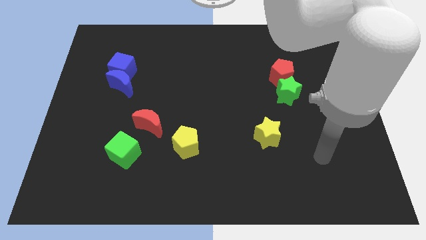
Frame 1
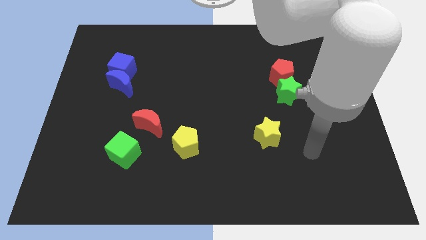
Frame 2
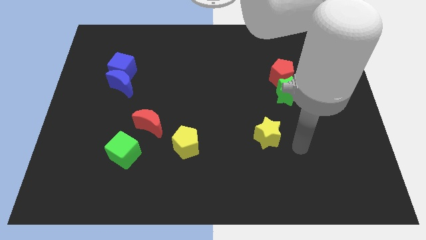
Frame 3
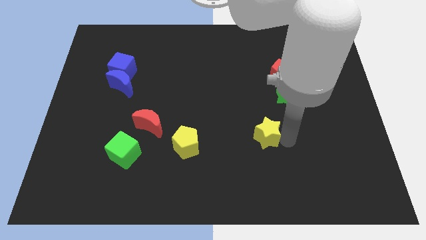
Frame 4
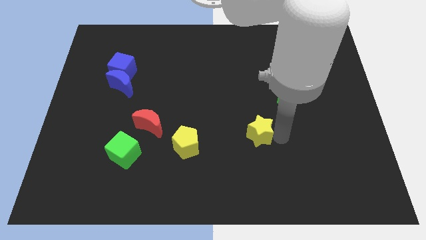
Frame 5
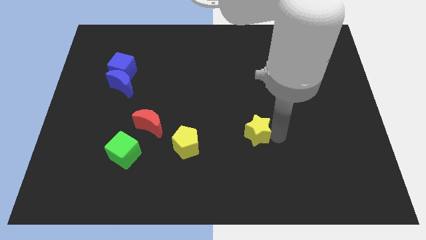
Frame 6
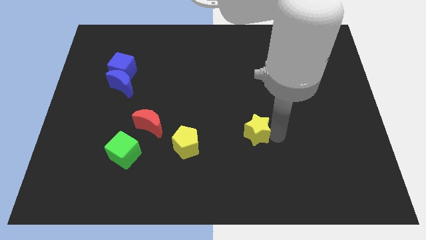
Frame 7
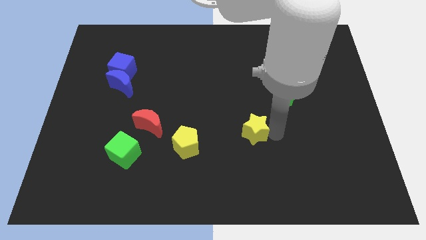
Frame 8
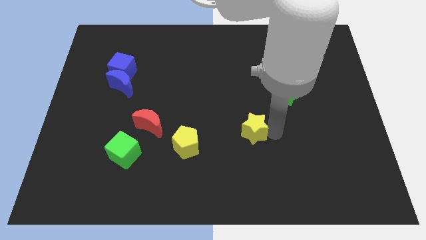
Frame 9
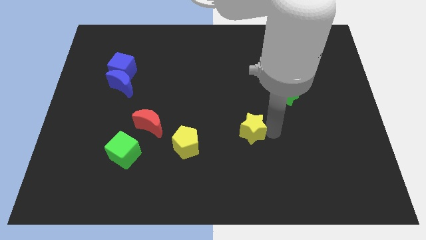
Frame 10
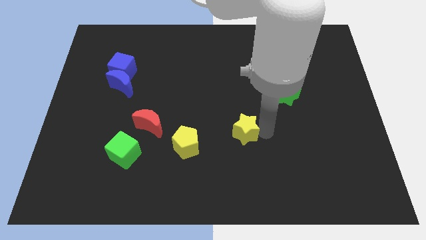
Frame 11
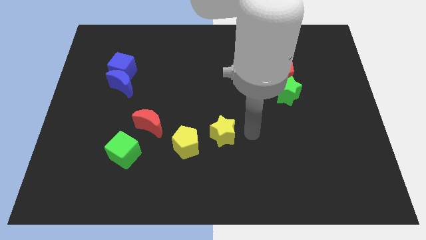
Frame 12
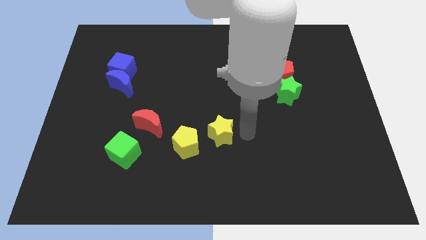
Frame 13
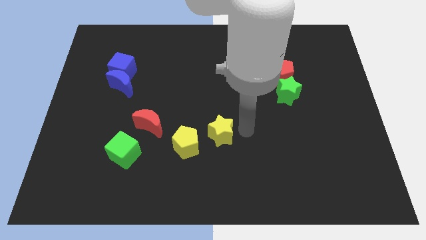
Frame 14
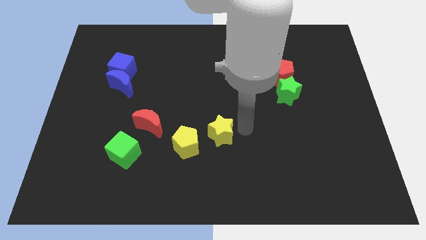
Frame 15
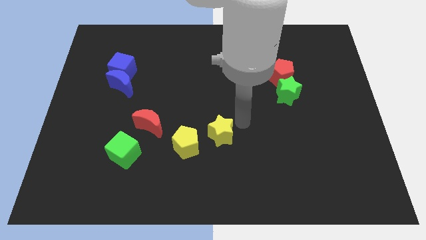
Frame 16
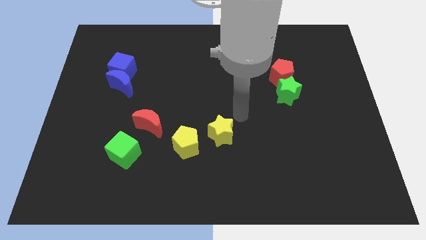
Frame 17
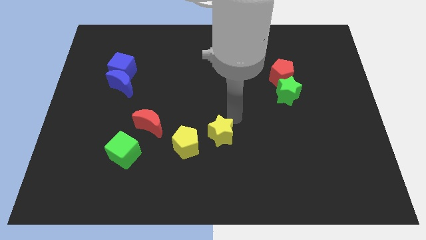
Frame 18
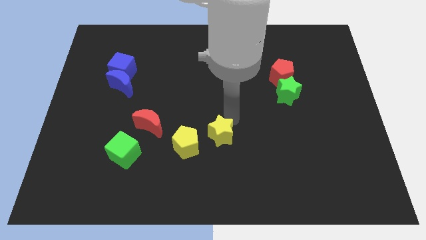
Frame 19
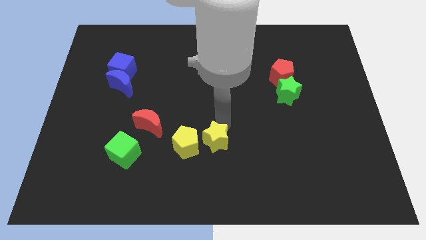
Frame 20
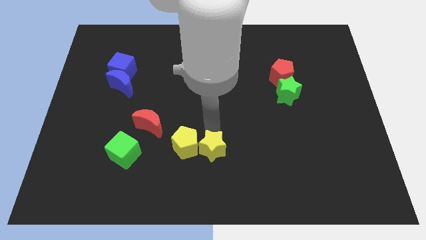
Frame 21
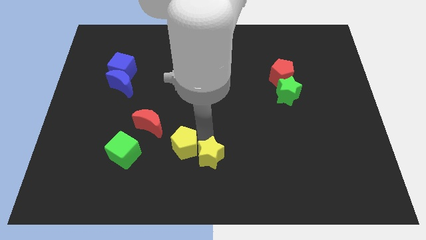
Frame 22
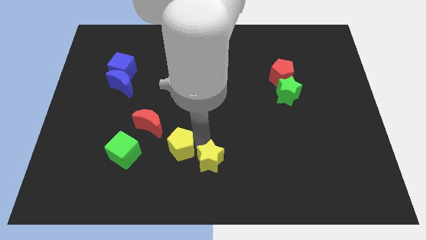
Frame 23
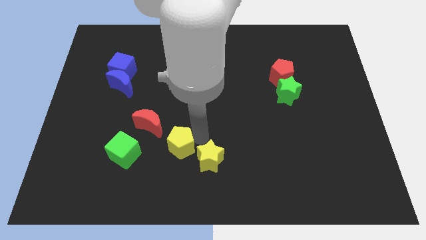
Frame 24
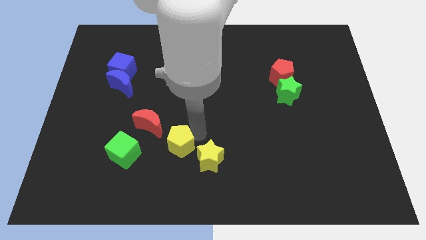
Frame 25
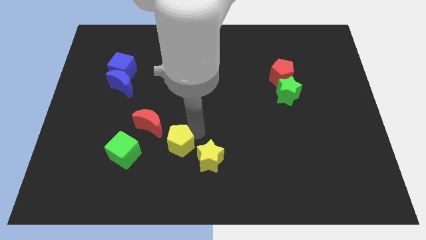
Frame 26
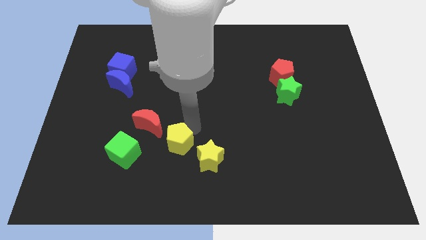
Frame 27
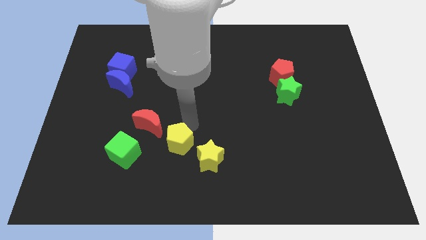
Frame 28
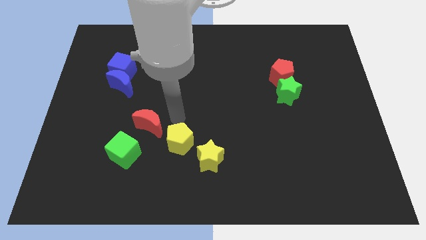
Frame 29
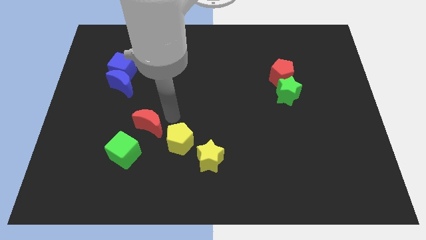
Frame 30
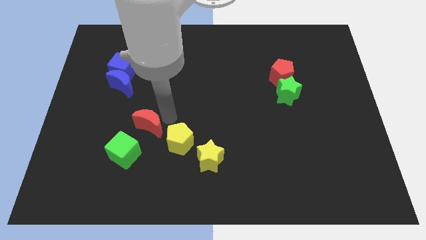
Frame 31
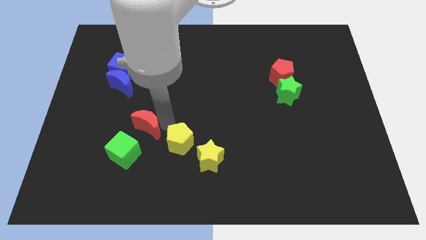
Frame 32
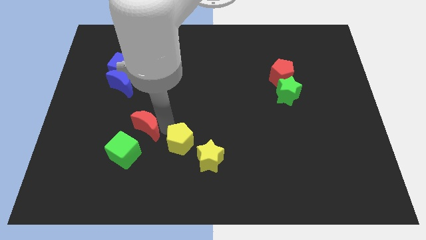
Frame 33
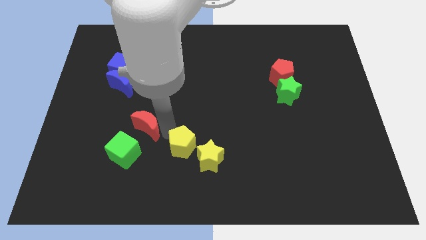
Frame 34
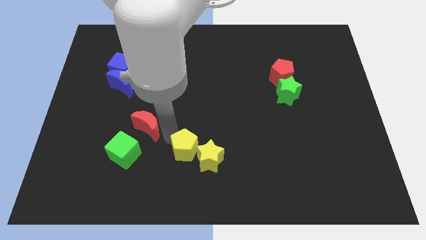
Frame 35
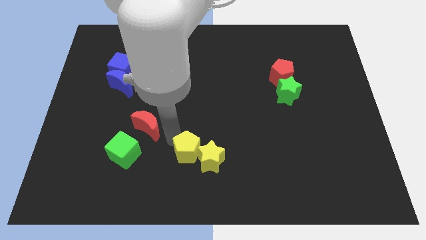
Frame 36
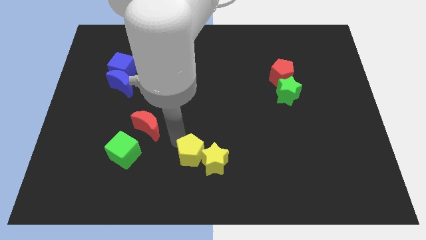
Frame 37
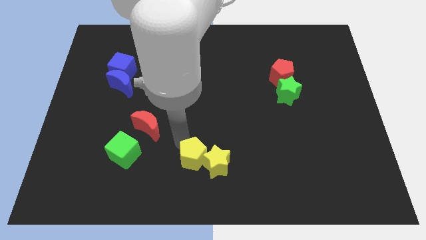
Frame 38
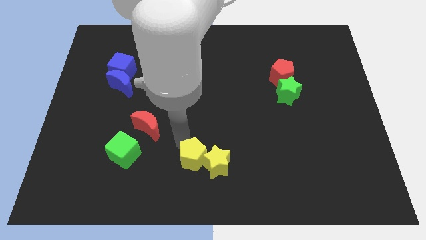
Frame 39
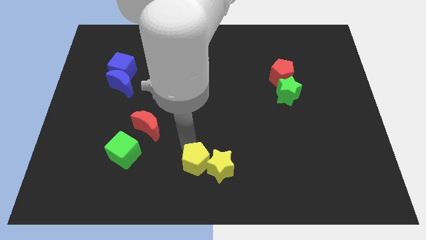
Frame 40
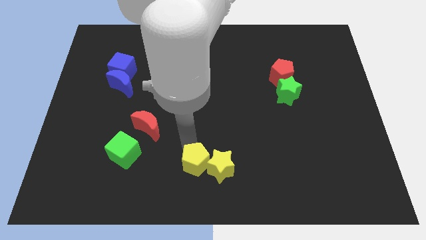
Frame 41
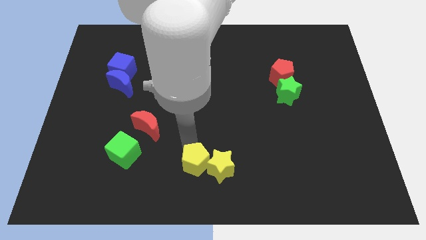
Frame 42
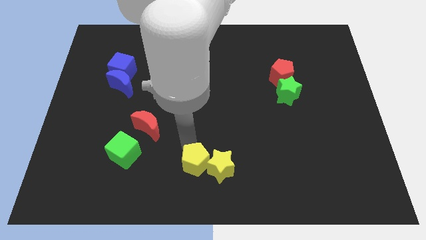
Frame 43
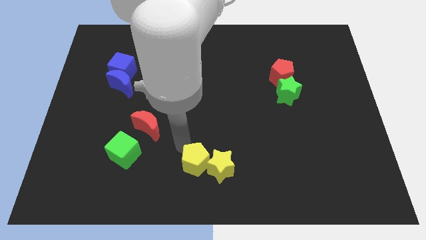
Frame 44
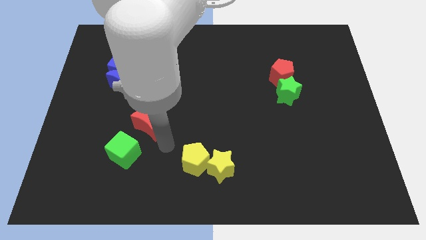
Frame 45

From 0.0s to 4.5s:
move the yellow pentagon and yellow star to the bottom center of the board

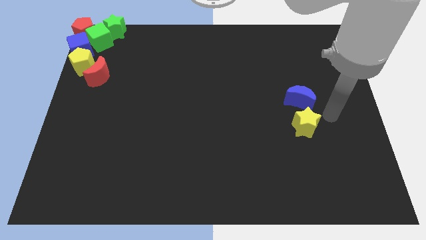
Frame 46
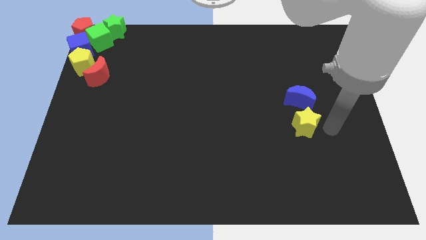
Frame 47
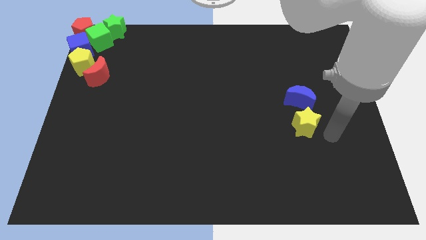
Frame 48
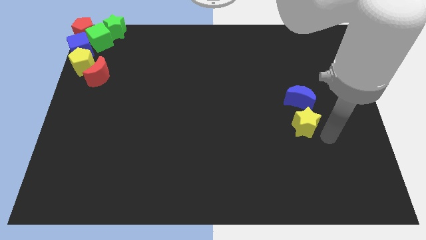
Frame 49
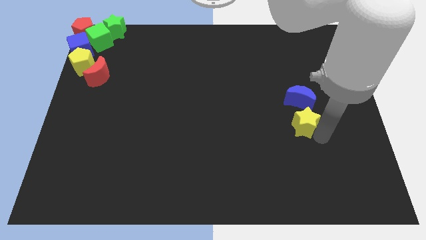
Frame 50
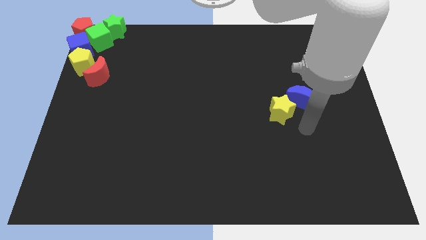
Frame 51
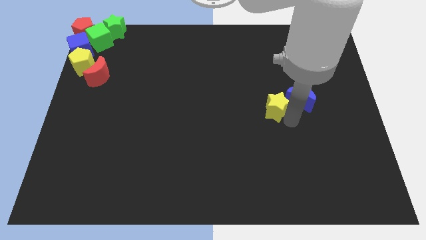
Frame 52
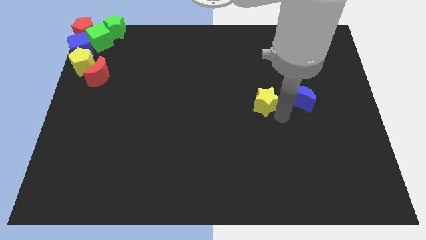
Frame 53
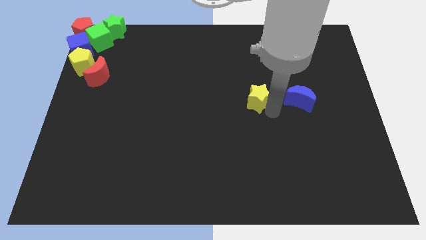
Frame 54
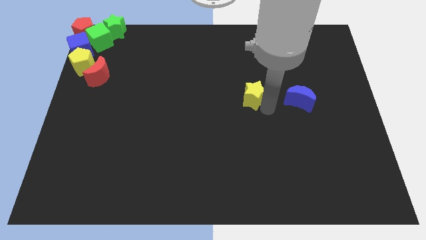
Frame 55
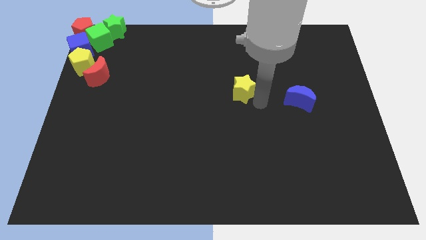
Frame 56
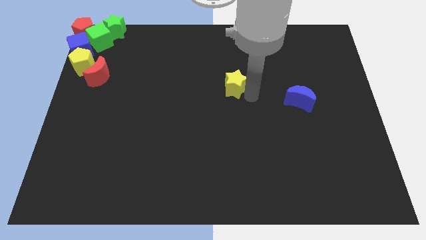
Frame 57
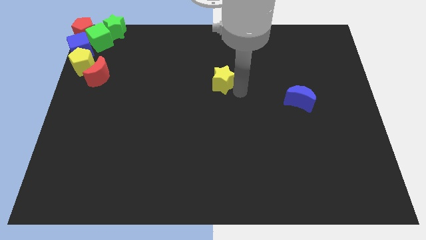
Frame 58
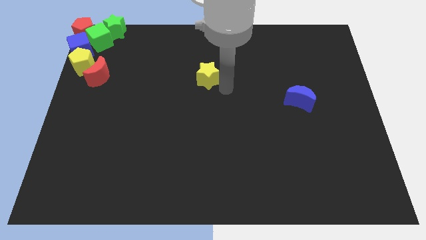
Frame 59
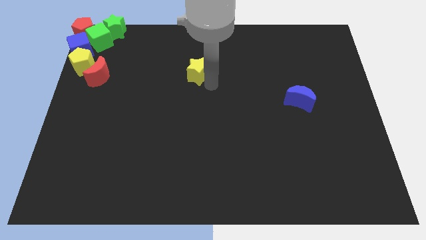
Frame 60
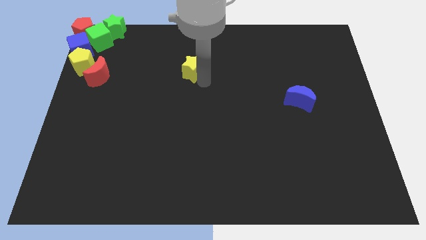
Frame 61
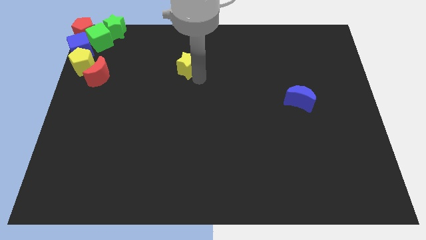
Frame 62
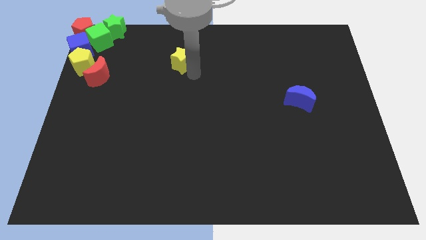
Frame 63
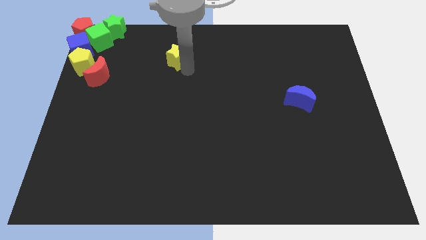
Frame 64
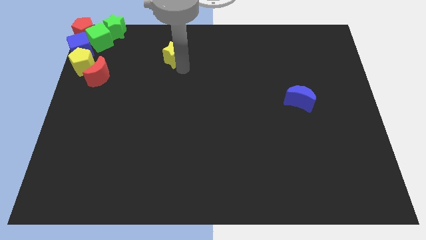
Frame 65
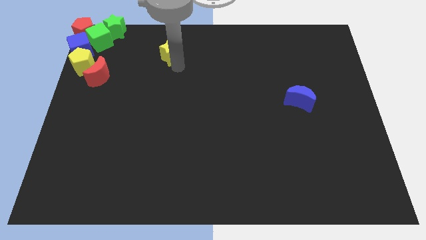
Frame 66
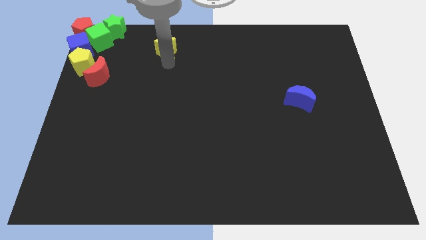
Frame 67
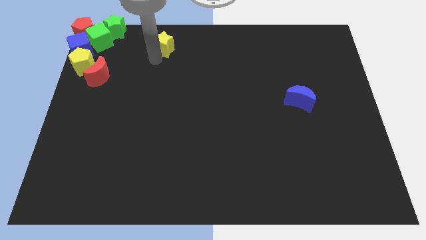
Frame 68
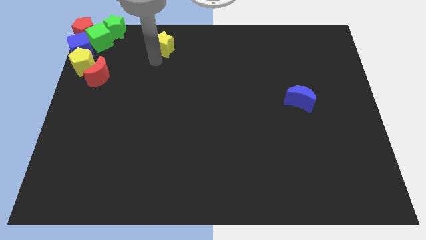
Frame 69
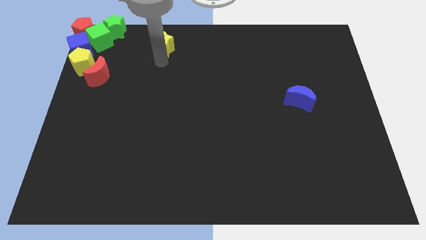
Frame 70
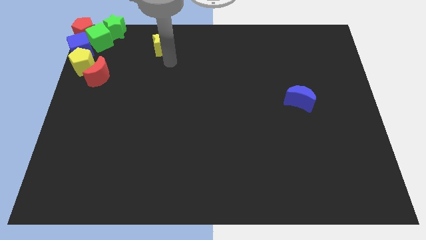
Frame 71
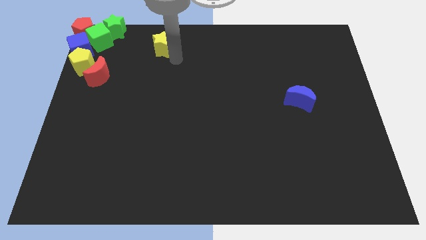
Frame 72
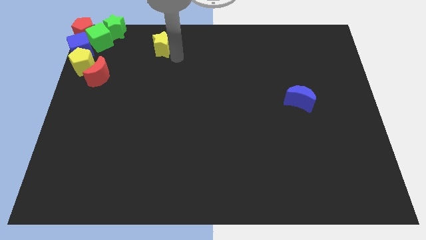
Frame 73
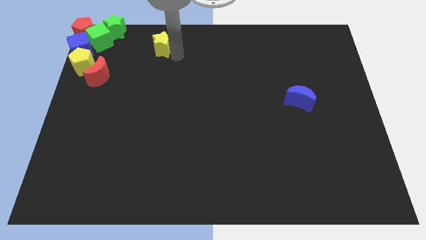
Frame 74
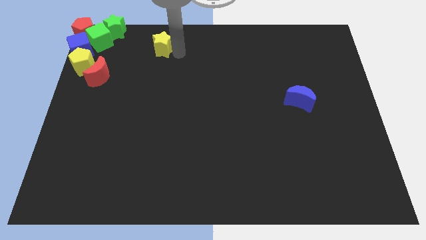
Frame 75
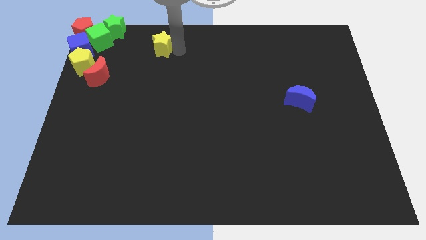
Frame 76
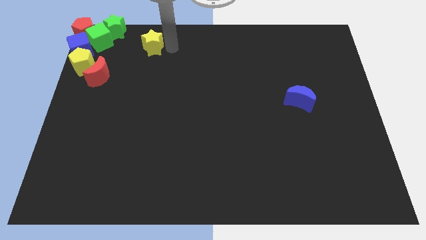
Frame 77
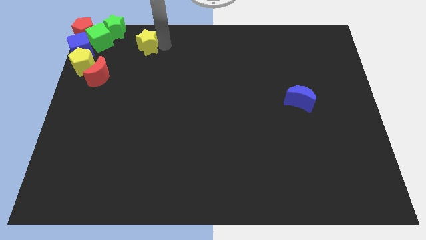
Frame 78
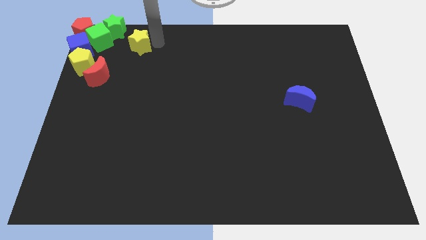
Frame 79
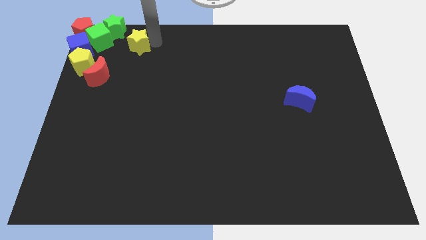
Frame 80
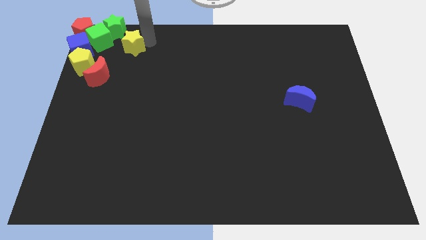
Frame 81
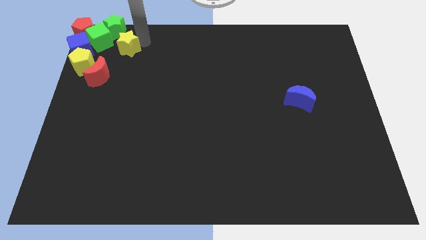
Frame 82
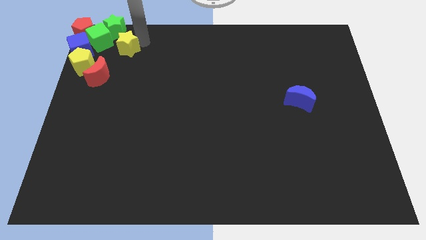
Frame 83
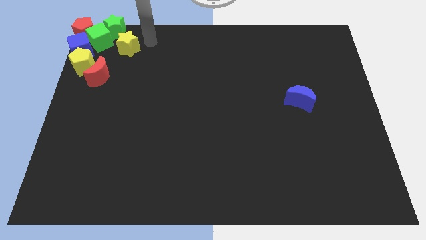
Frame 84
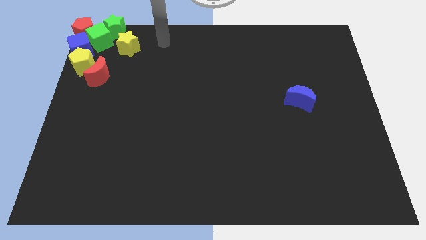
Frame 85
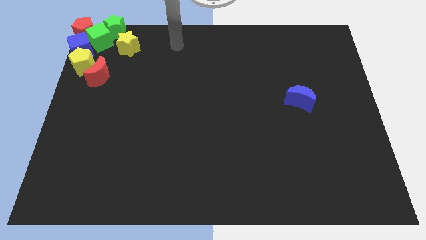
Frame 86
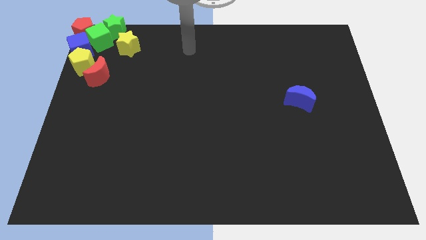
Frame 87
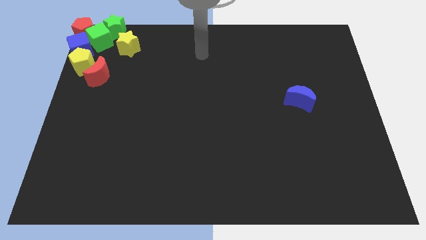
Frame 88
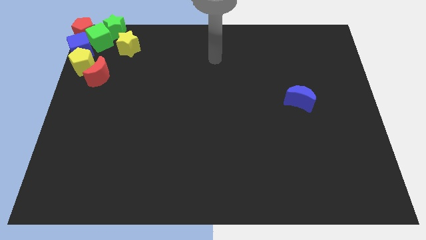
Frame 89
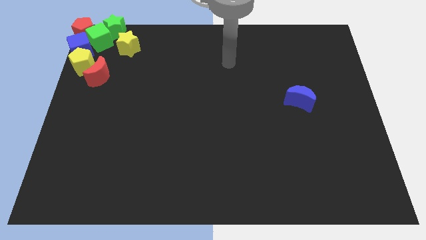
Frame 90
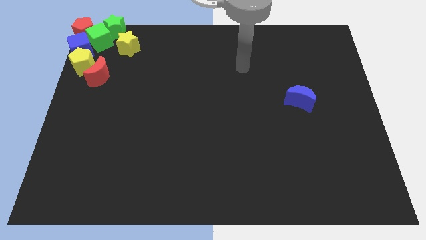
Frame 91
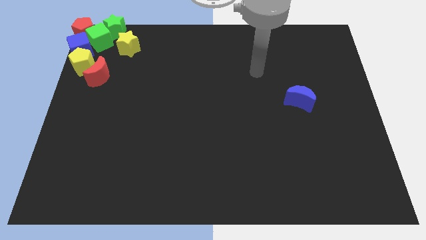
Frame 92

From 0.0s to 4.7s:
move the yellow star close to the green cube
